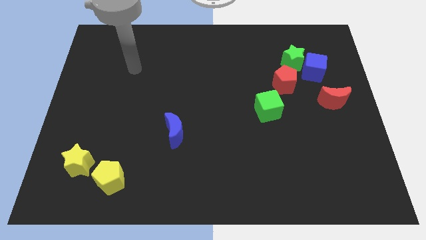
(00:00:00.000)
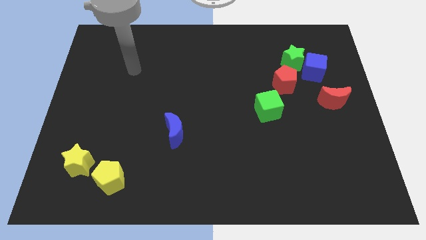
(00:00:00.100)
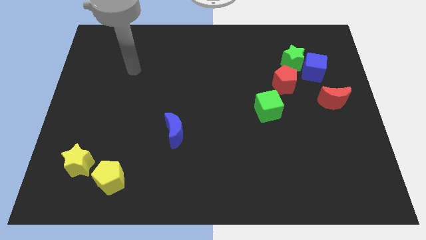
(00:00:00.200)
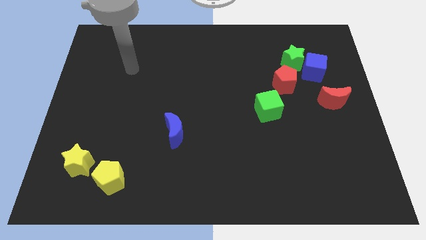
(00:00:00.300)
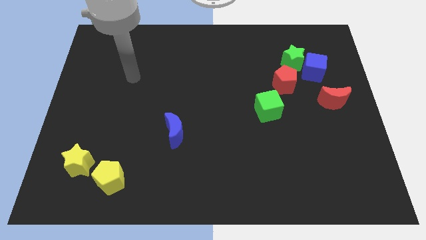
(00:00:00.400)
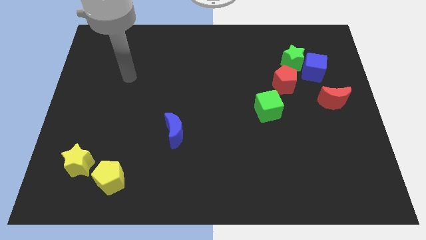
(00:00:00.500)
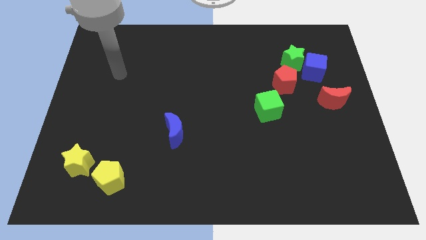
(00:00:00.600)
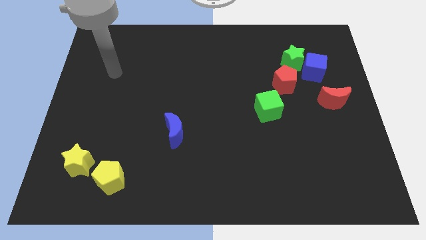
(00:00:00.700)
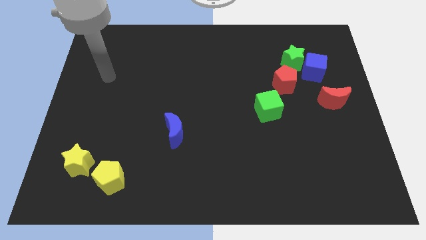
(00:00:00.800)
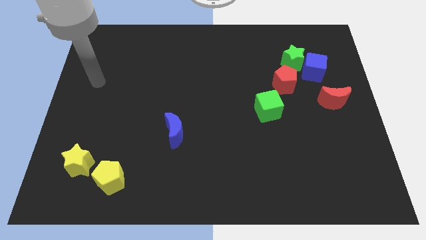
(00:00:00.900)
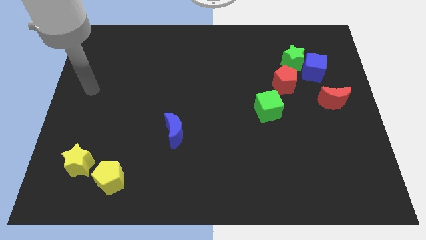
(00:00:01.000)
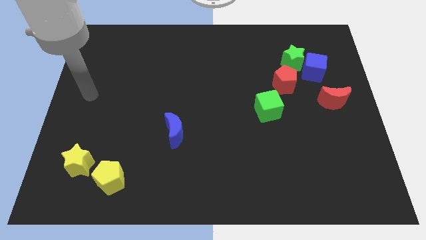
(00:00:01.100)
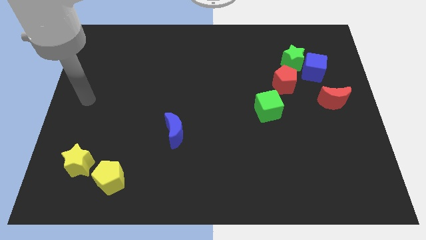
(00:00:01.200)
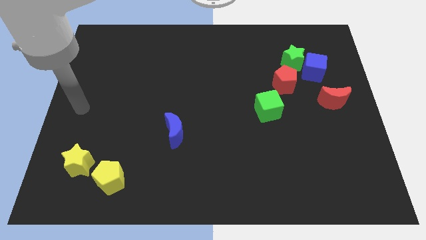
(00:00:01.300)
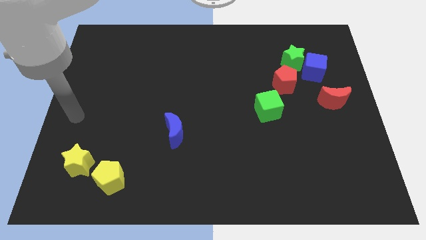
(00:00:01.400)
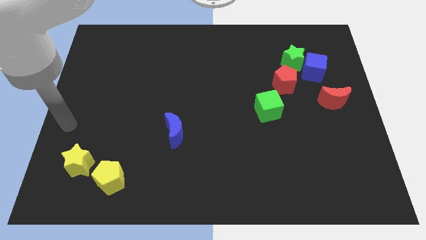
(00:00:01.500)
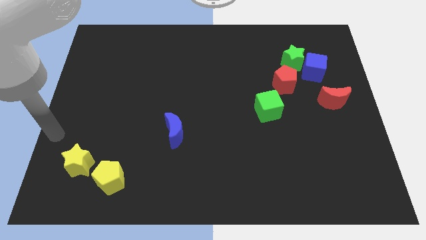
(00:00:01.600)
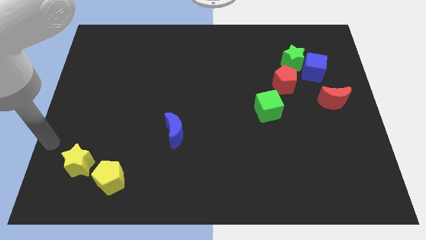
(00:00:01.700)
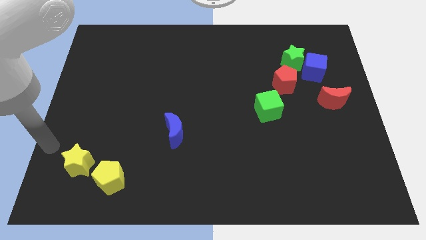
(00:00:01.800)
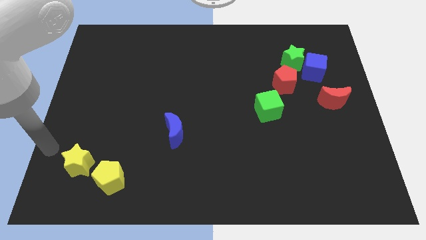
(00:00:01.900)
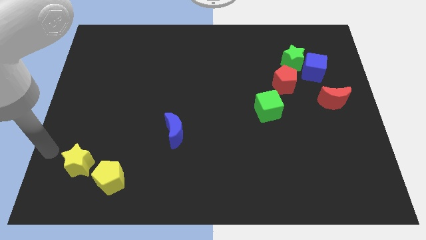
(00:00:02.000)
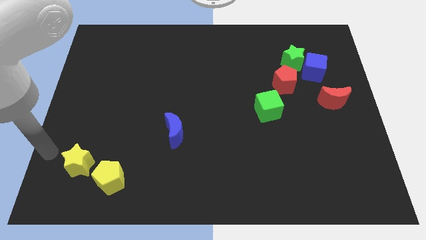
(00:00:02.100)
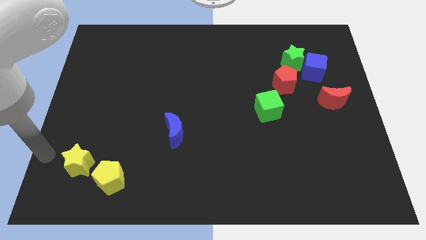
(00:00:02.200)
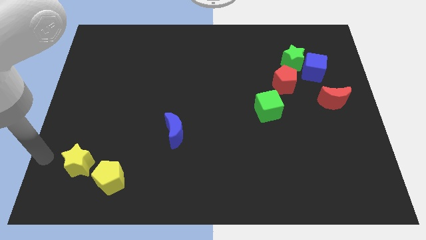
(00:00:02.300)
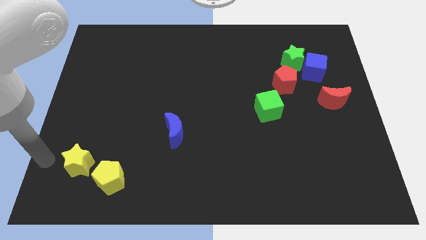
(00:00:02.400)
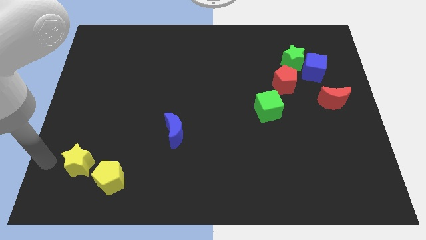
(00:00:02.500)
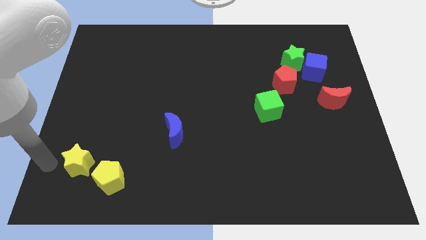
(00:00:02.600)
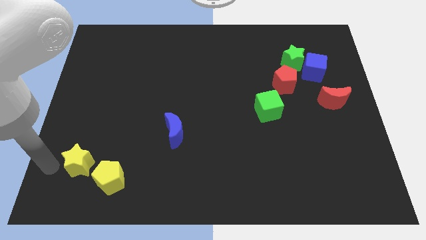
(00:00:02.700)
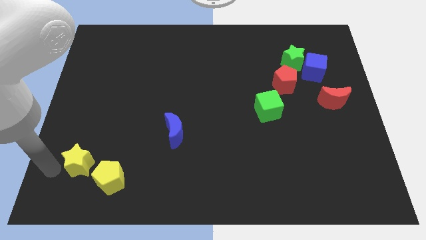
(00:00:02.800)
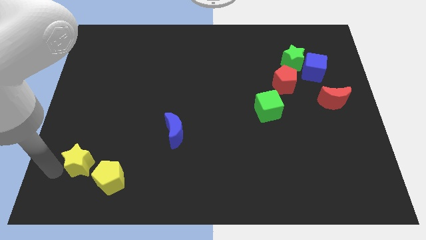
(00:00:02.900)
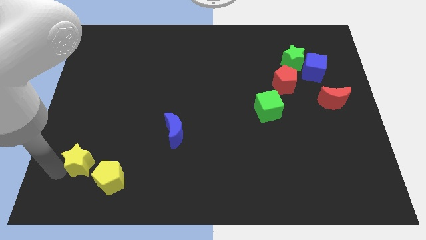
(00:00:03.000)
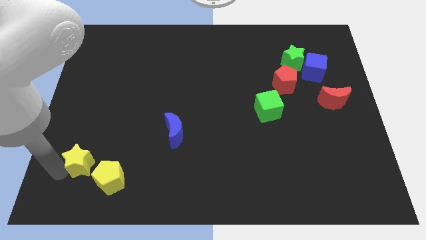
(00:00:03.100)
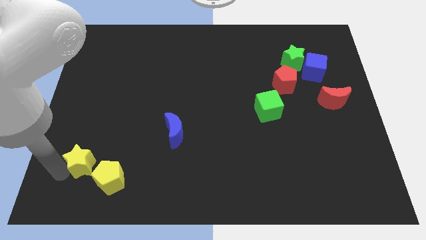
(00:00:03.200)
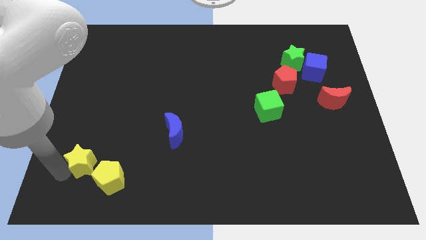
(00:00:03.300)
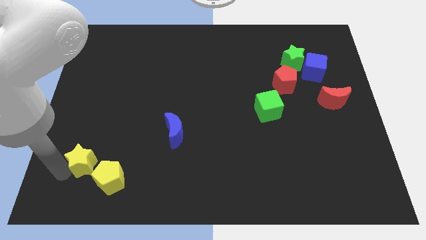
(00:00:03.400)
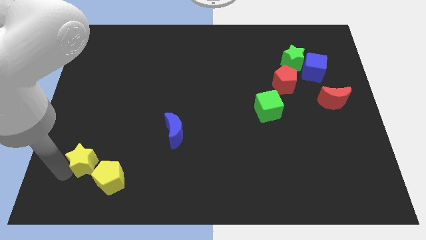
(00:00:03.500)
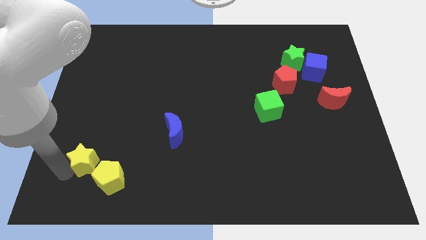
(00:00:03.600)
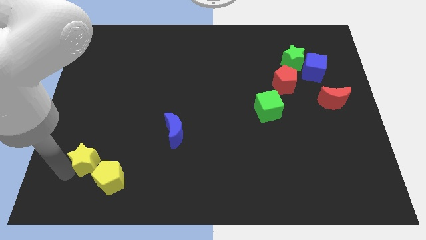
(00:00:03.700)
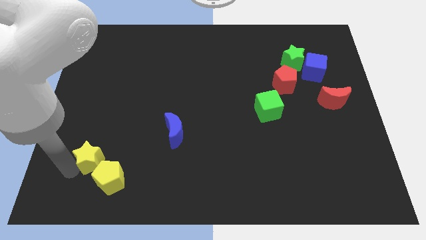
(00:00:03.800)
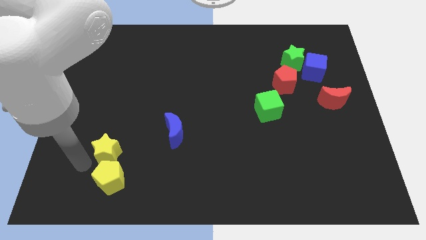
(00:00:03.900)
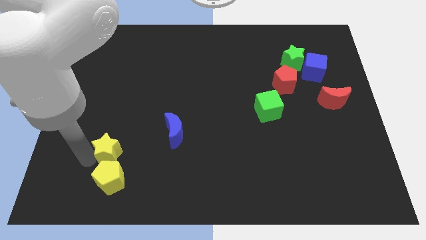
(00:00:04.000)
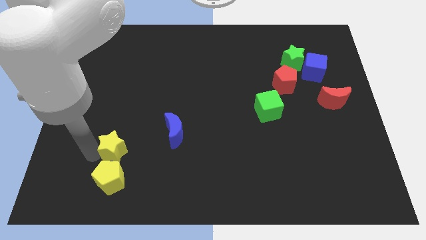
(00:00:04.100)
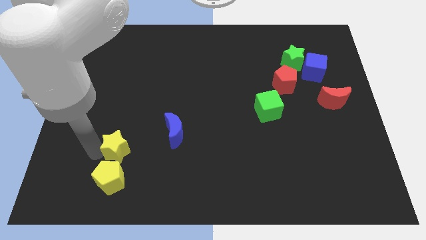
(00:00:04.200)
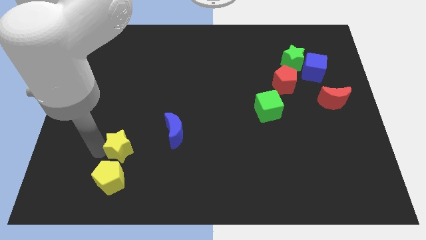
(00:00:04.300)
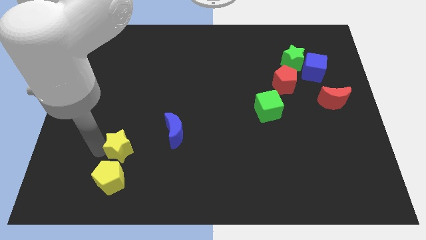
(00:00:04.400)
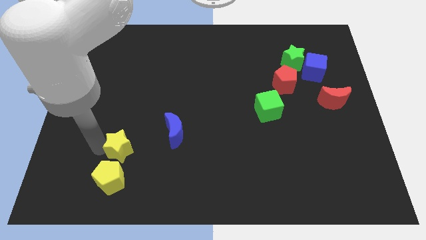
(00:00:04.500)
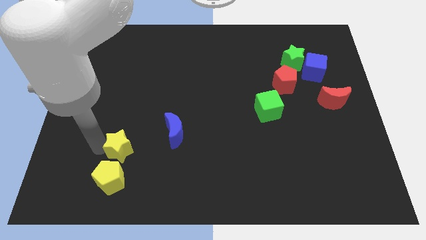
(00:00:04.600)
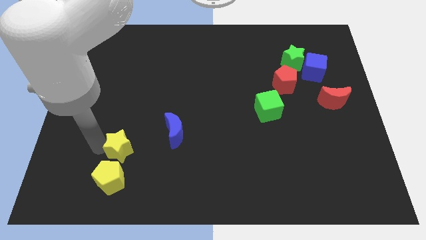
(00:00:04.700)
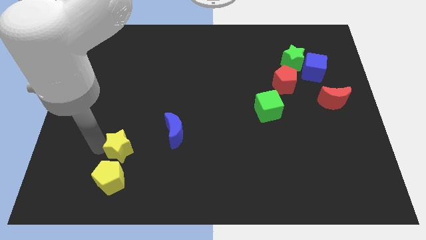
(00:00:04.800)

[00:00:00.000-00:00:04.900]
move the yellow star above the yellow pentagon

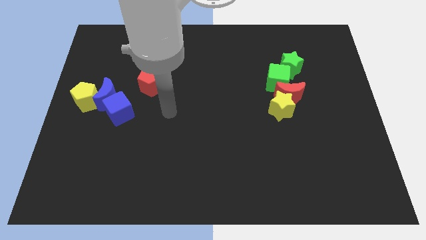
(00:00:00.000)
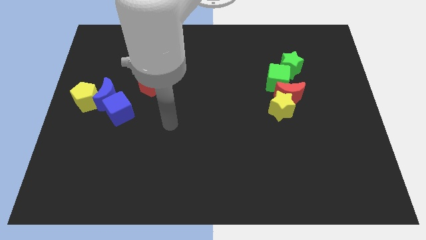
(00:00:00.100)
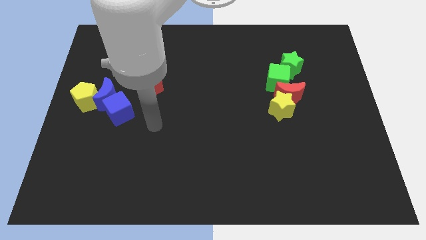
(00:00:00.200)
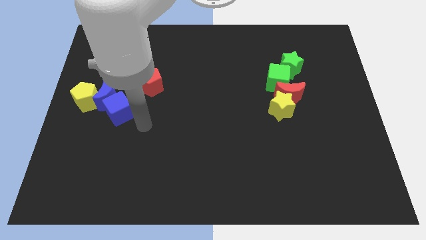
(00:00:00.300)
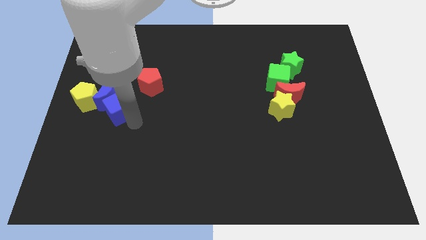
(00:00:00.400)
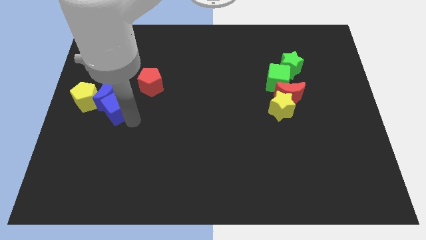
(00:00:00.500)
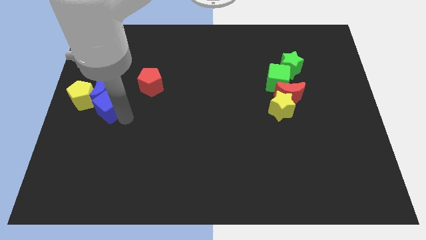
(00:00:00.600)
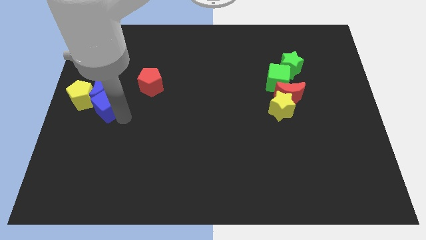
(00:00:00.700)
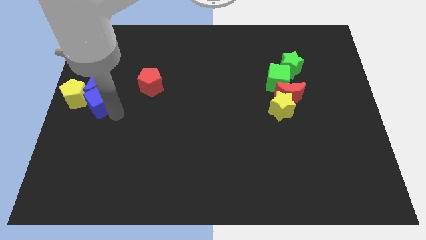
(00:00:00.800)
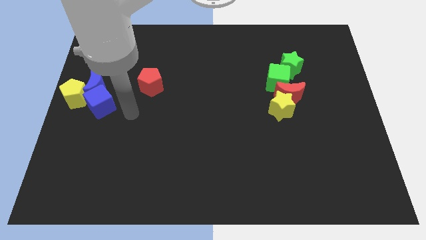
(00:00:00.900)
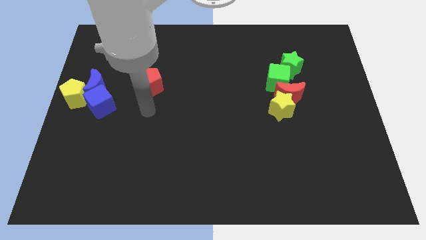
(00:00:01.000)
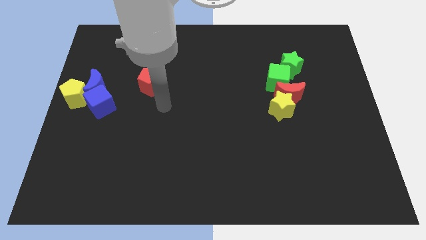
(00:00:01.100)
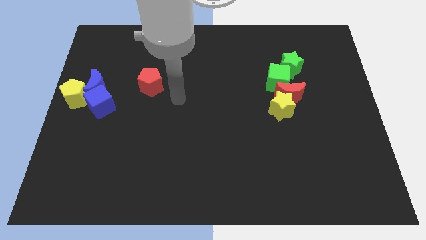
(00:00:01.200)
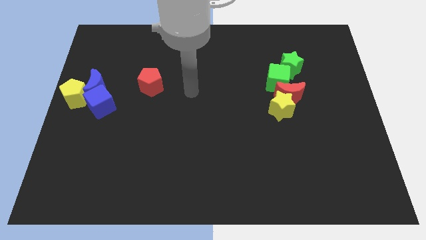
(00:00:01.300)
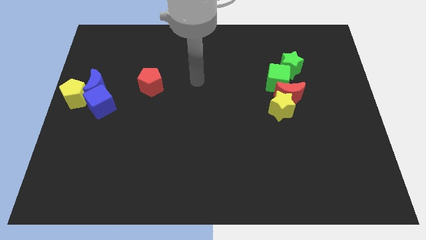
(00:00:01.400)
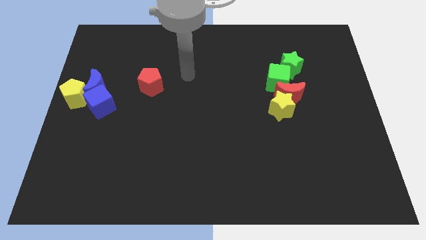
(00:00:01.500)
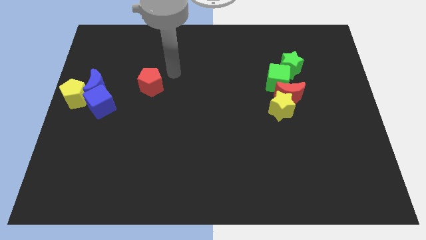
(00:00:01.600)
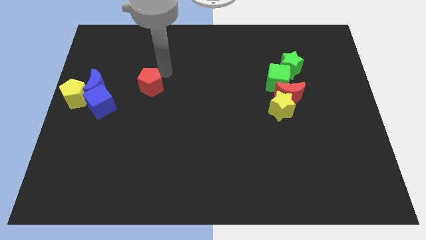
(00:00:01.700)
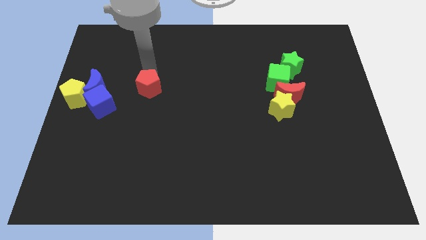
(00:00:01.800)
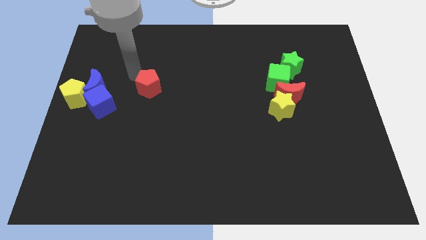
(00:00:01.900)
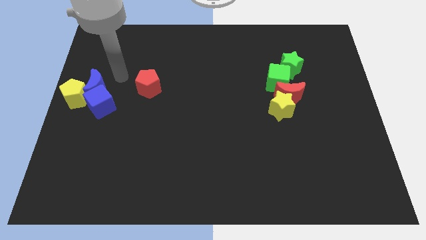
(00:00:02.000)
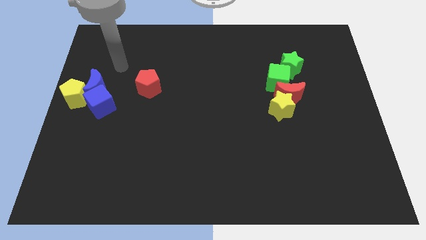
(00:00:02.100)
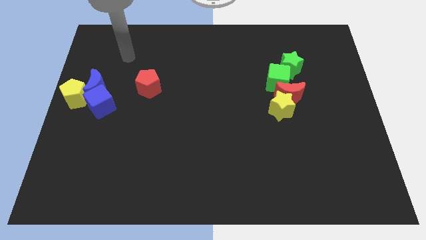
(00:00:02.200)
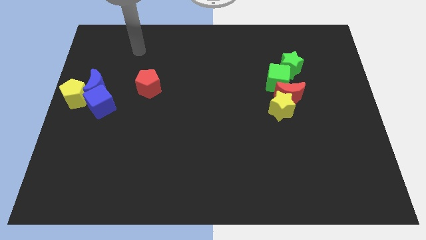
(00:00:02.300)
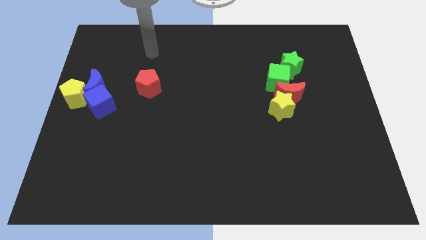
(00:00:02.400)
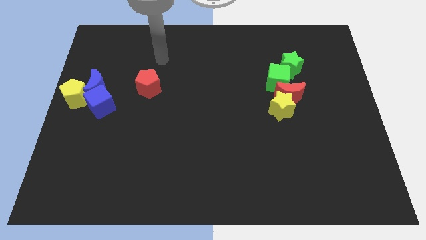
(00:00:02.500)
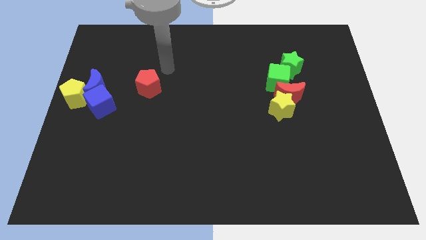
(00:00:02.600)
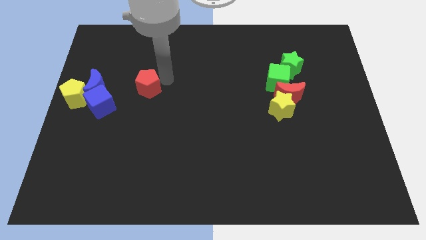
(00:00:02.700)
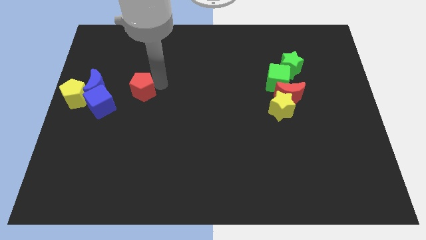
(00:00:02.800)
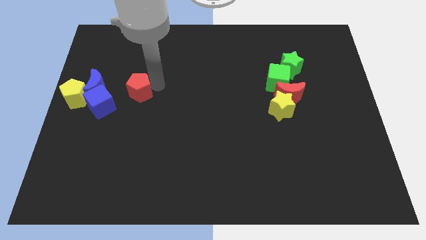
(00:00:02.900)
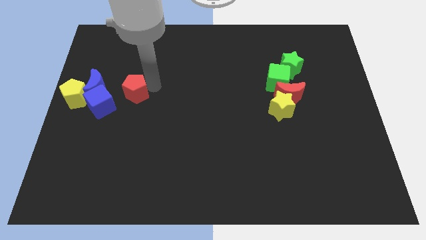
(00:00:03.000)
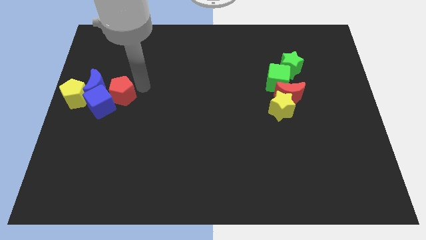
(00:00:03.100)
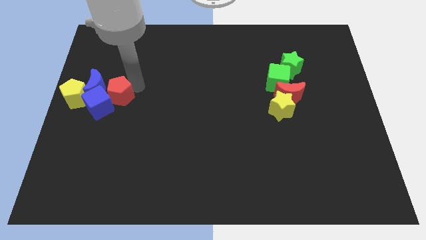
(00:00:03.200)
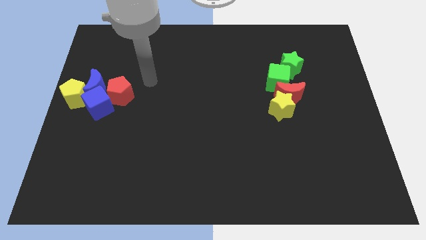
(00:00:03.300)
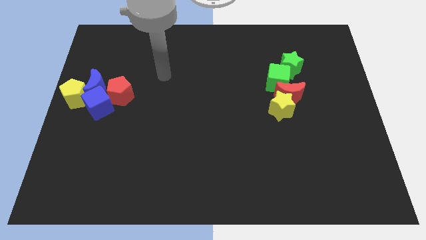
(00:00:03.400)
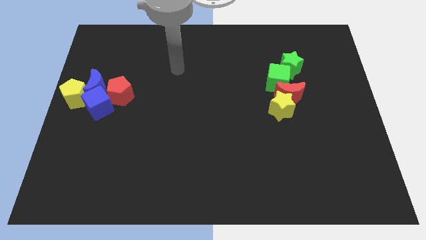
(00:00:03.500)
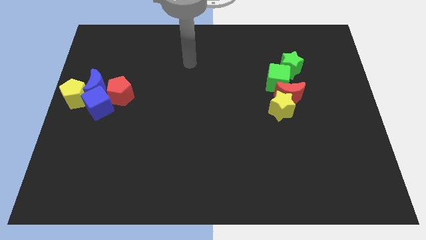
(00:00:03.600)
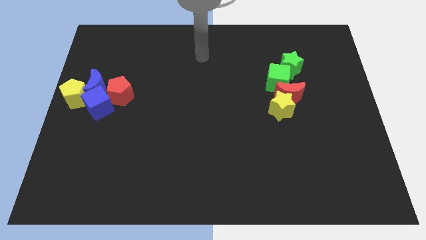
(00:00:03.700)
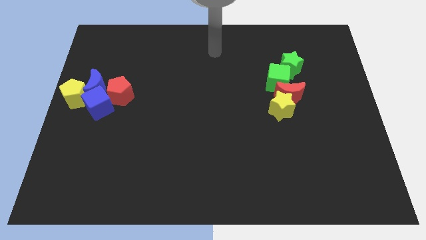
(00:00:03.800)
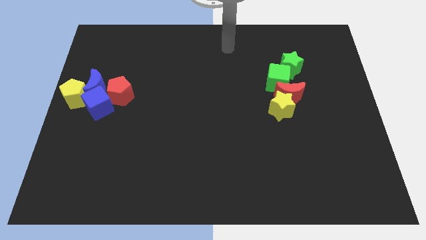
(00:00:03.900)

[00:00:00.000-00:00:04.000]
place the blue cube to the bottom of the blue crescent
